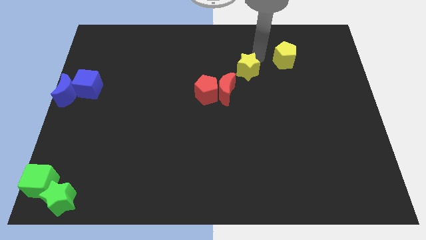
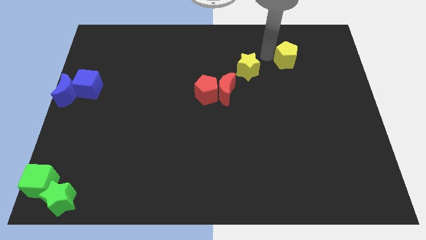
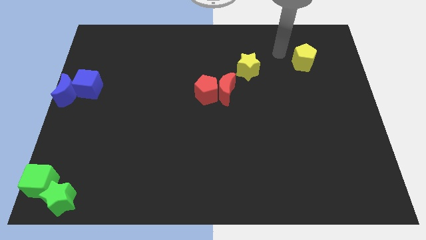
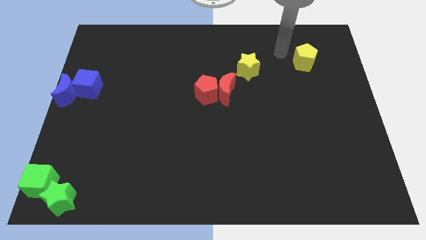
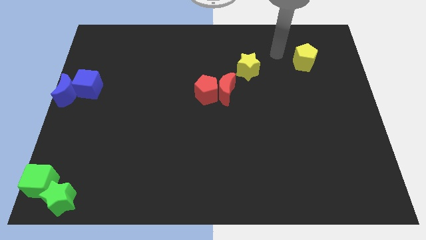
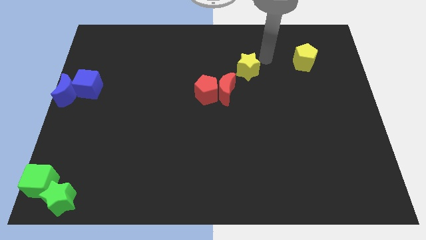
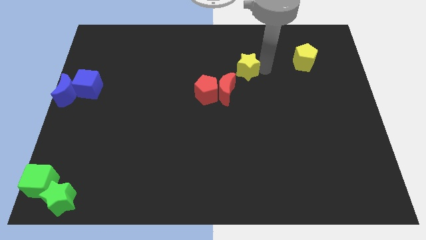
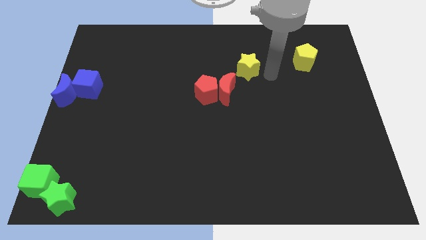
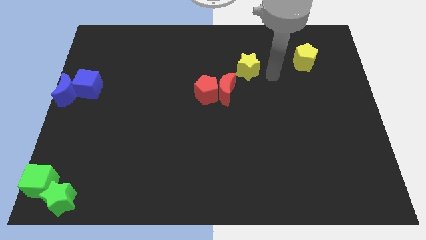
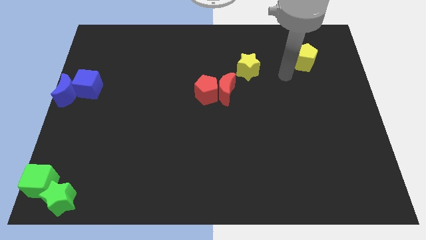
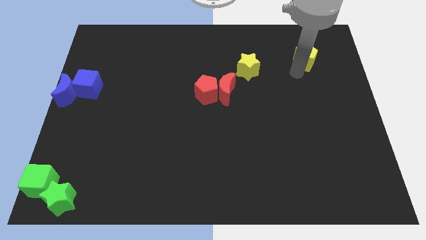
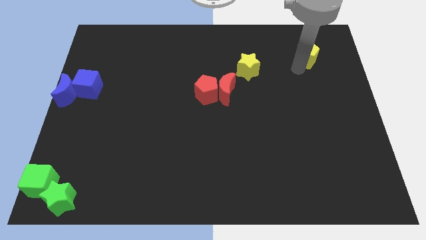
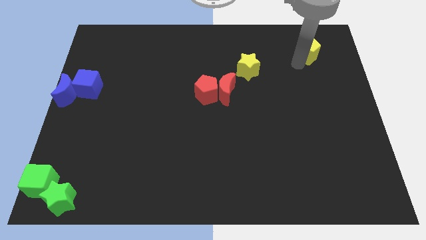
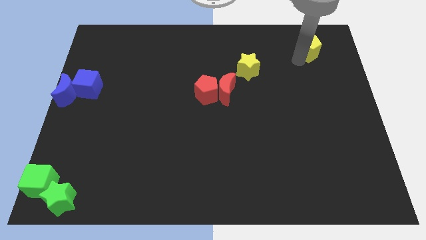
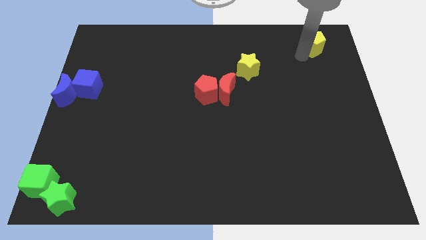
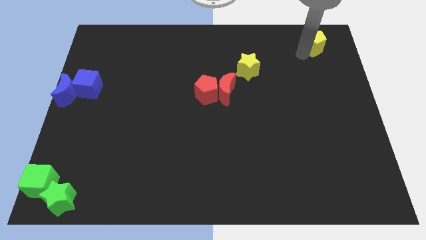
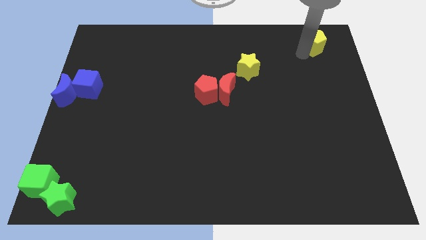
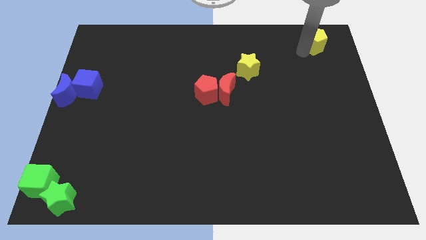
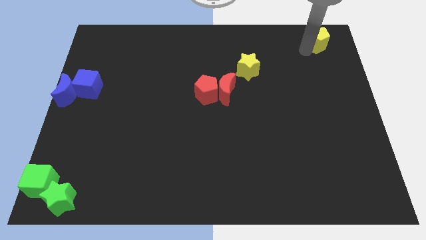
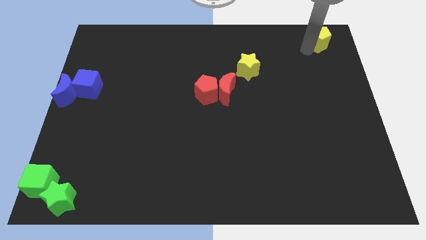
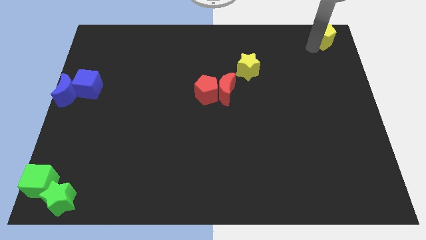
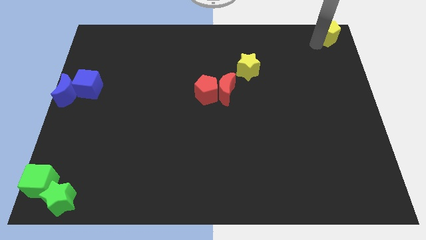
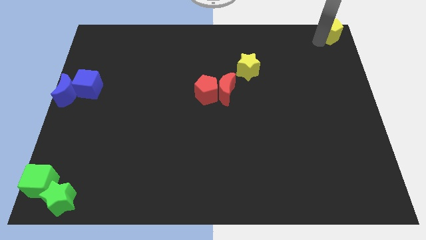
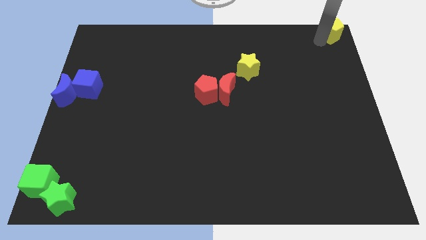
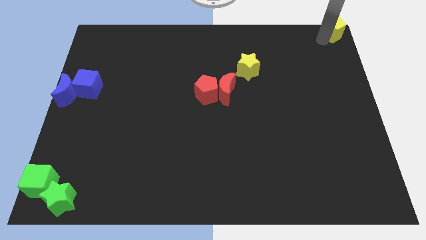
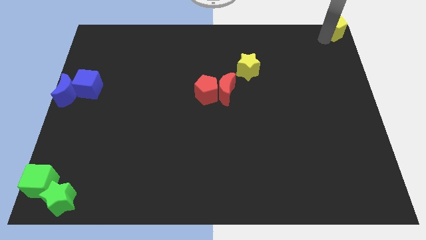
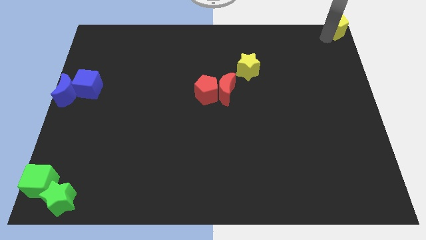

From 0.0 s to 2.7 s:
slide the yellow pentagon to the top right

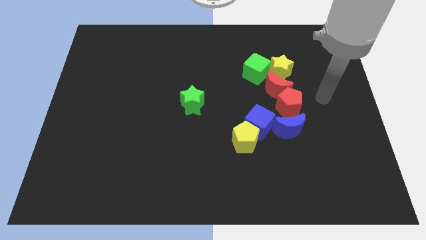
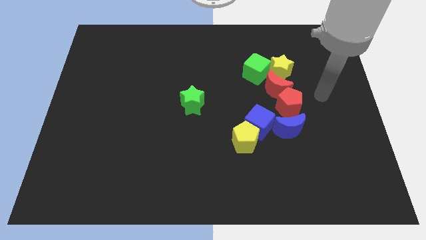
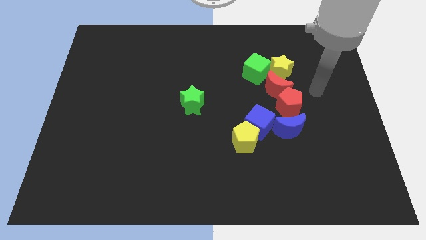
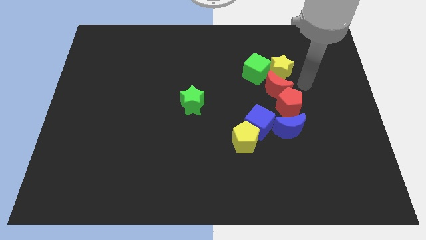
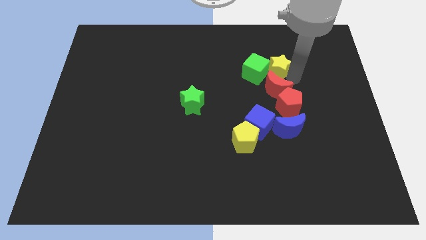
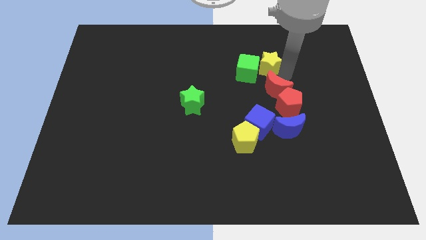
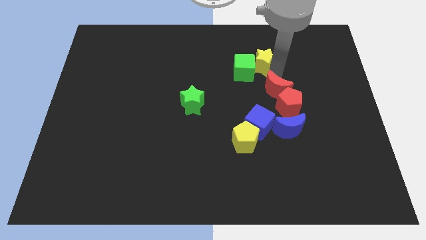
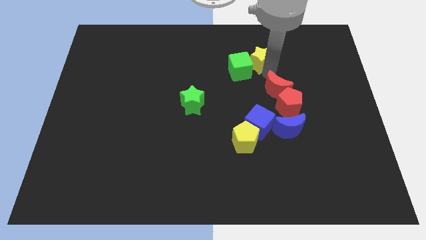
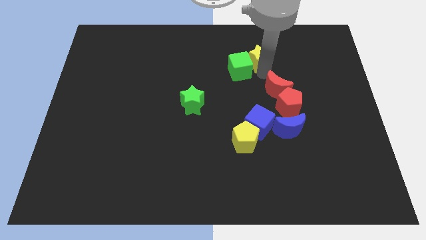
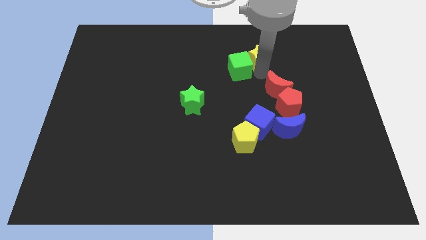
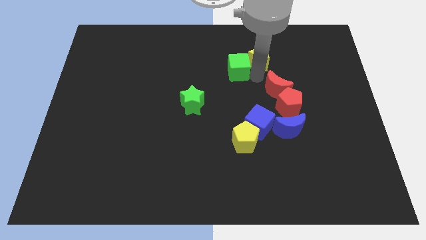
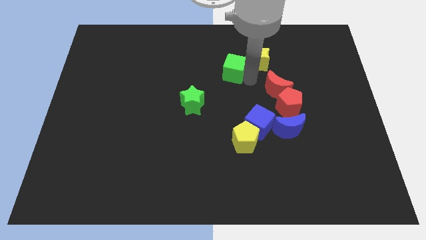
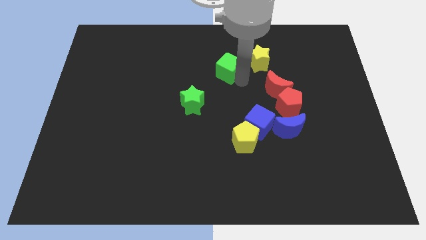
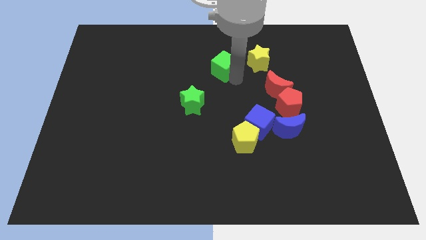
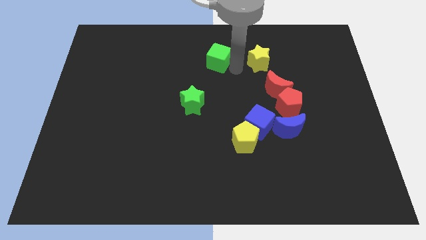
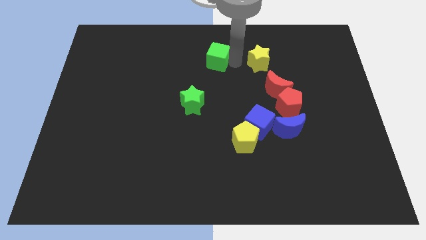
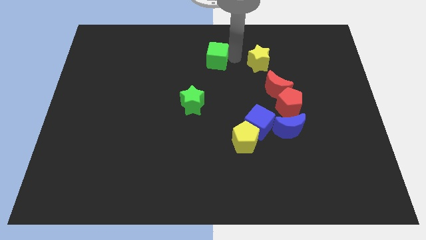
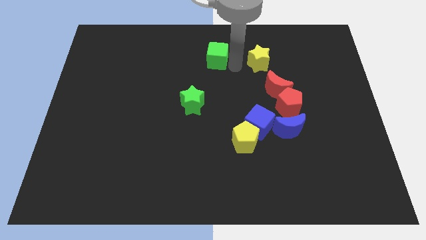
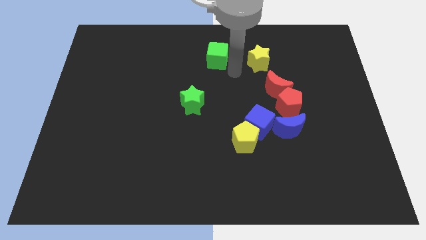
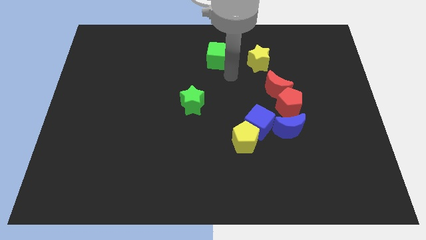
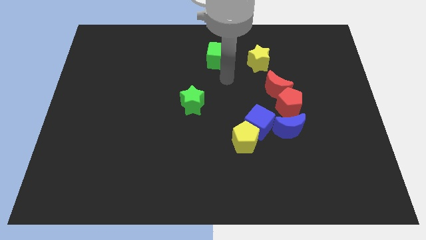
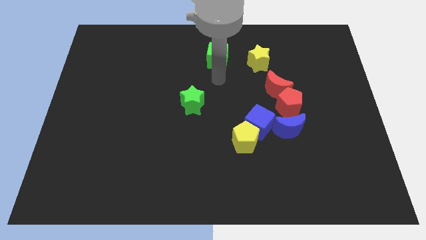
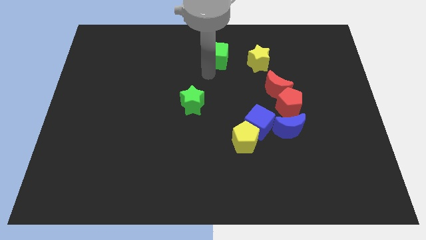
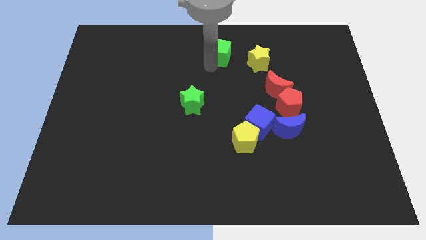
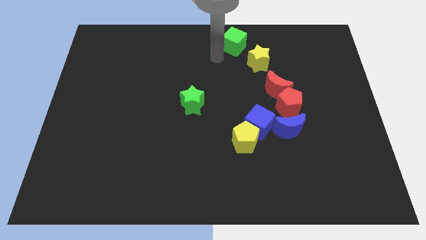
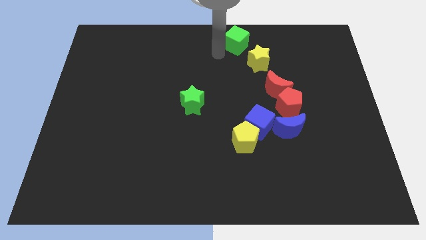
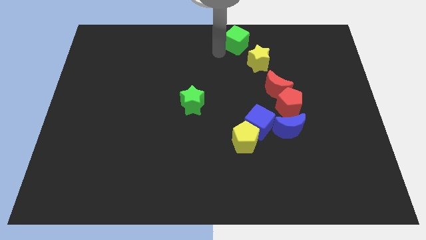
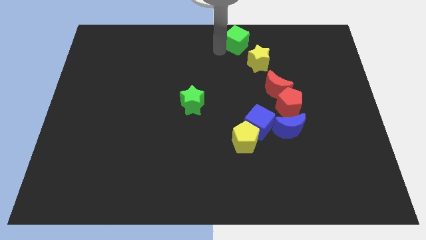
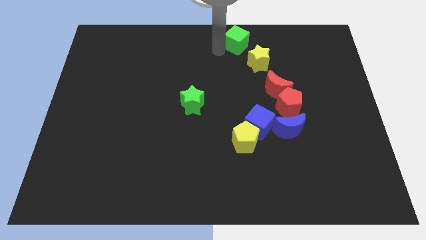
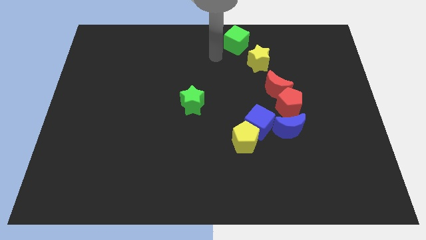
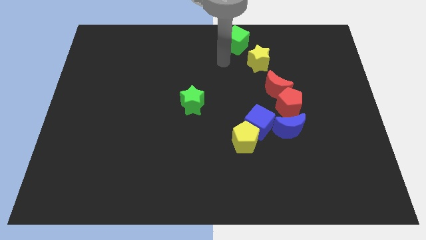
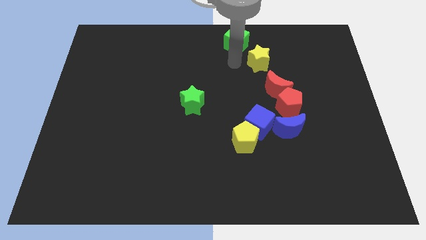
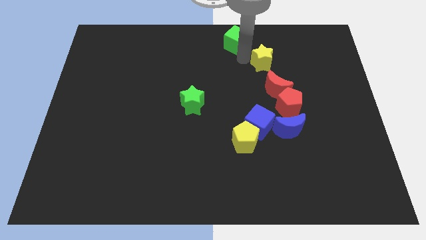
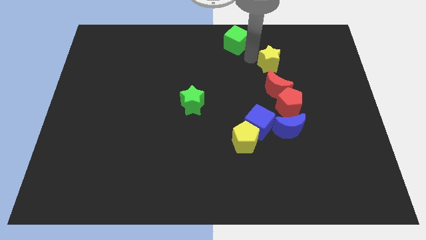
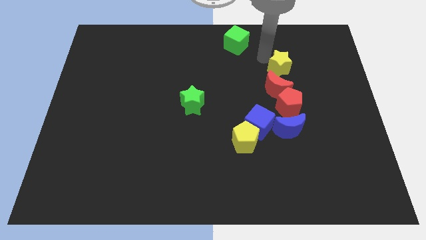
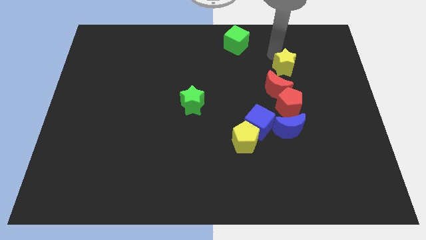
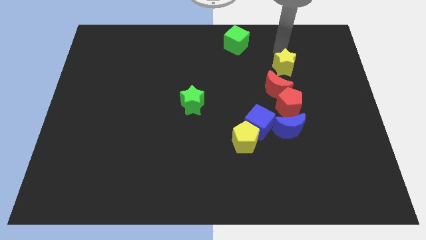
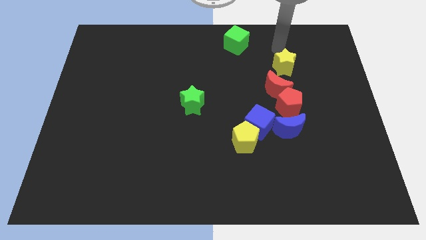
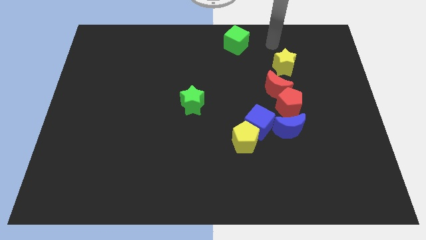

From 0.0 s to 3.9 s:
move the green cube towards the top center

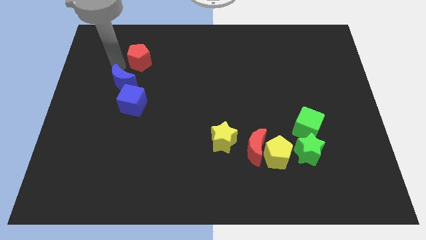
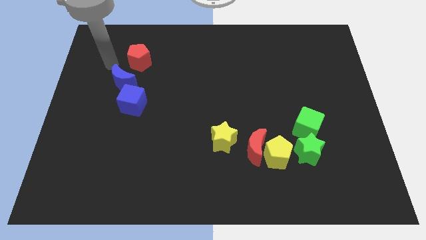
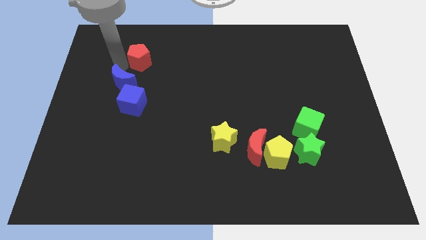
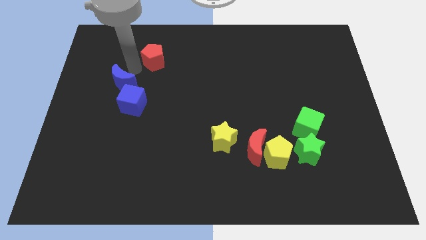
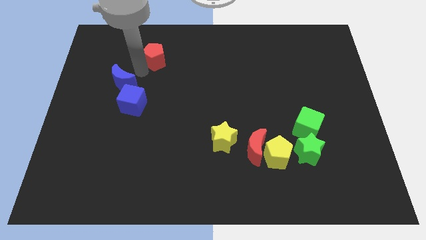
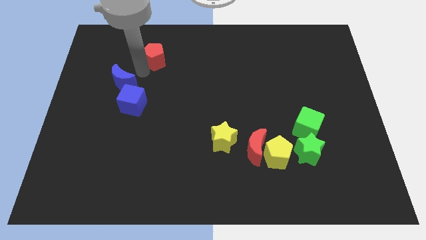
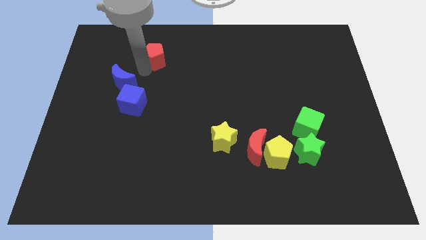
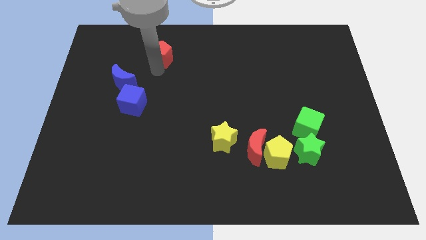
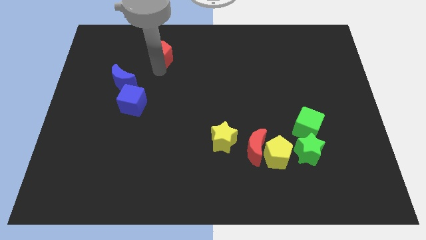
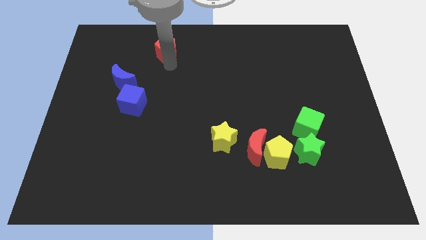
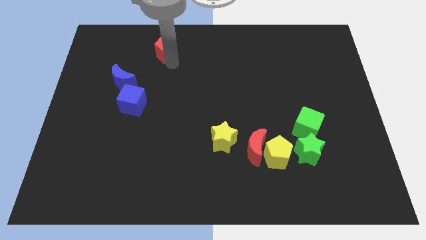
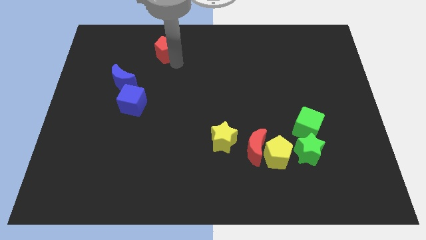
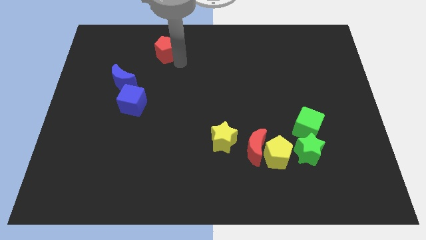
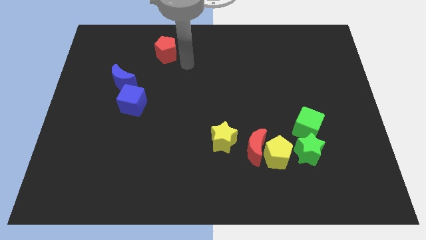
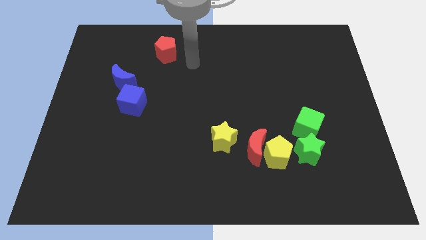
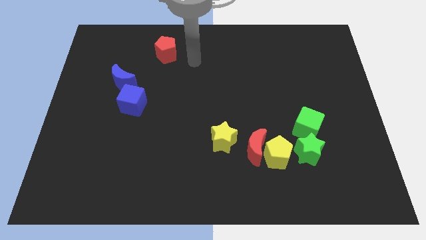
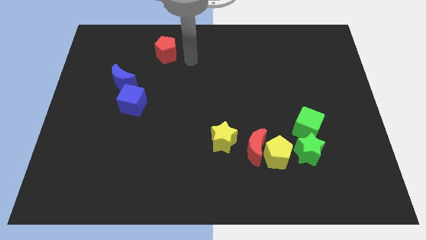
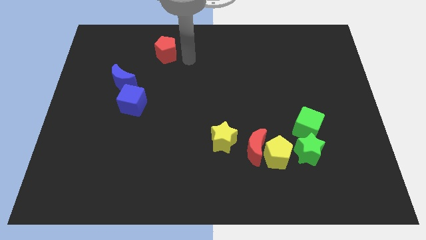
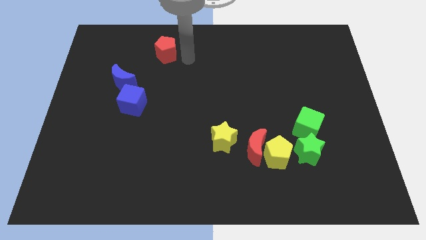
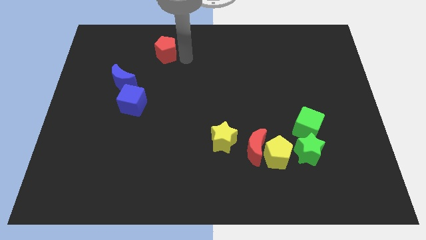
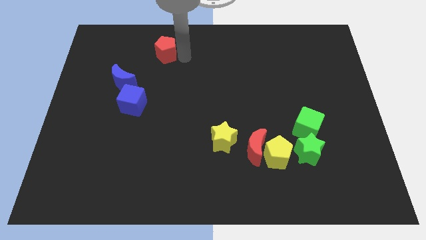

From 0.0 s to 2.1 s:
slide the red pentagon diagonally to the yellow star

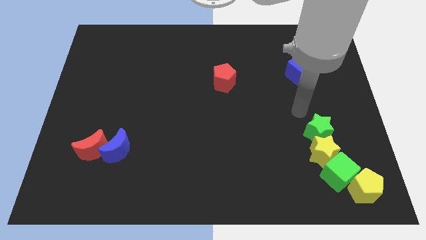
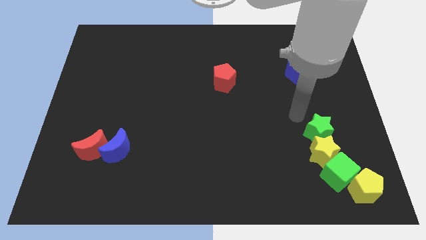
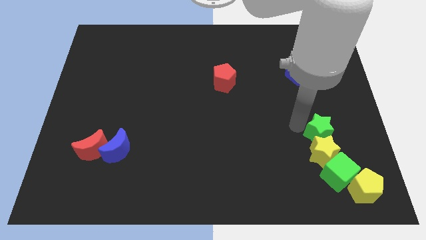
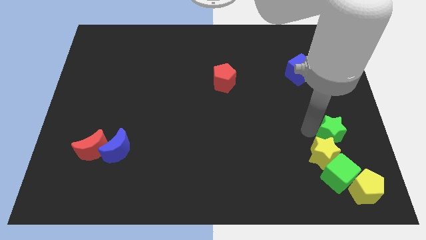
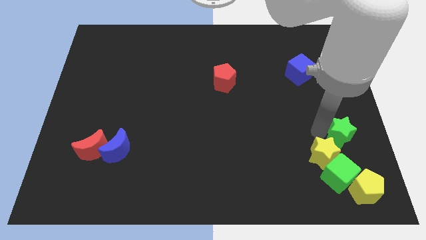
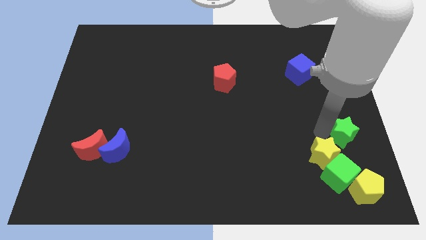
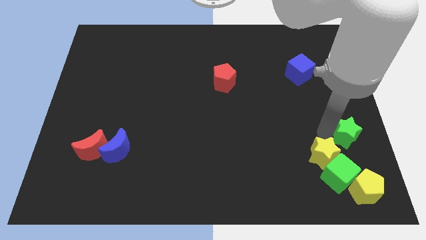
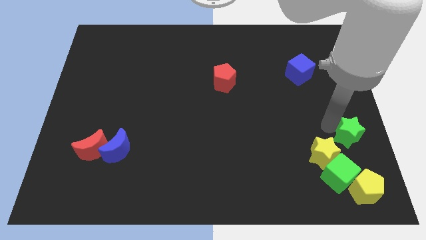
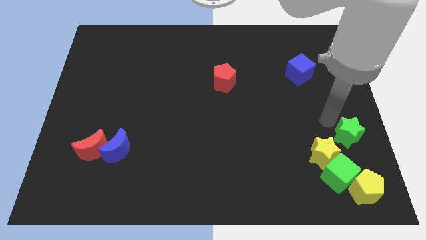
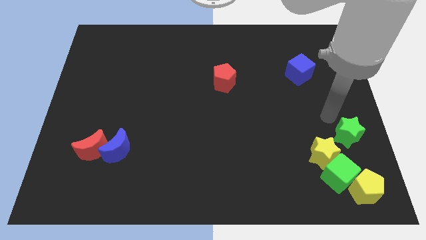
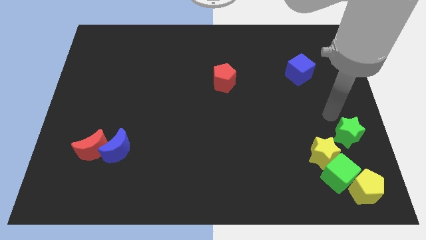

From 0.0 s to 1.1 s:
slightly move the green star toward center right
